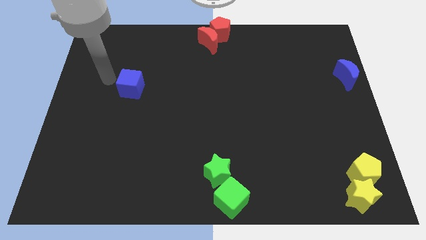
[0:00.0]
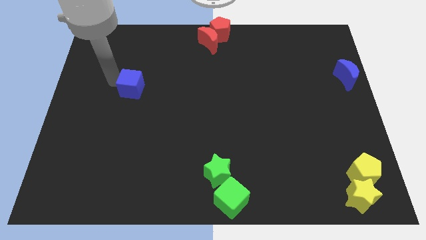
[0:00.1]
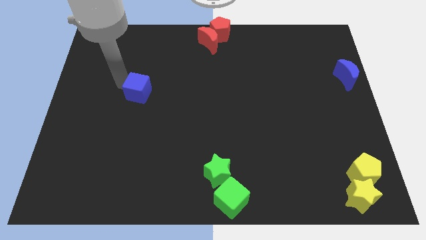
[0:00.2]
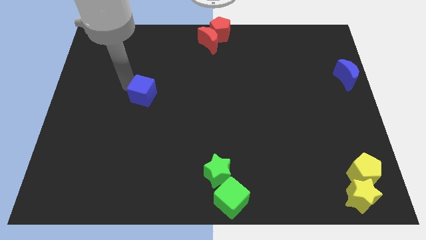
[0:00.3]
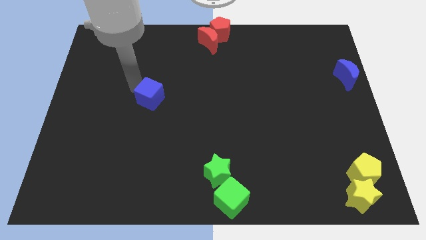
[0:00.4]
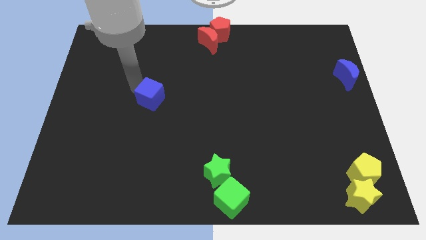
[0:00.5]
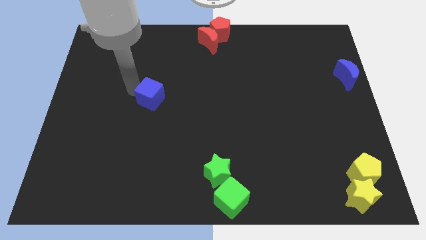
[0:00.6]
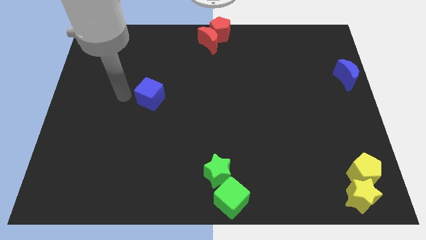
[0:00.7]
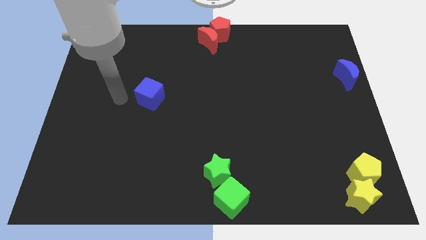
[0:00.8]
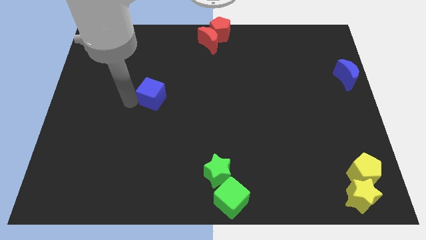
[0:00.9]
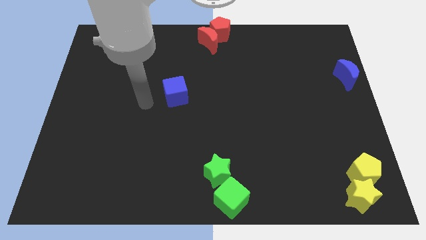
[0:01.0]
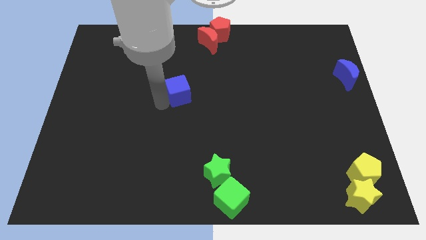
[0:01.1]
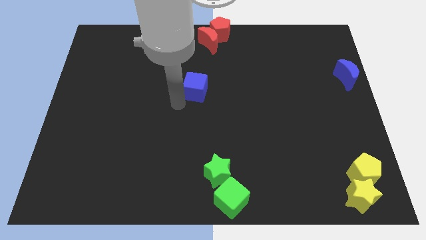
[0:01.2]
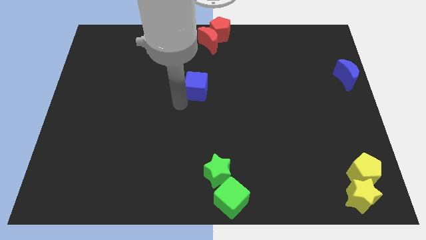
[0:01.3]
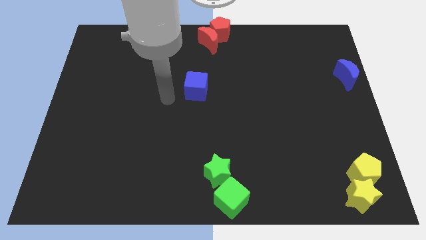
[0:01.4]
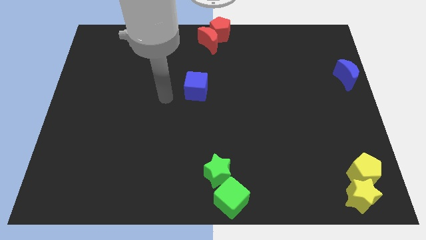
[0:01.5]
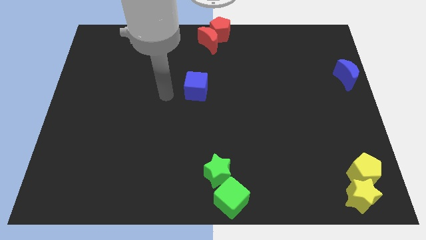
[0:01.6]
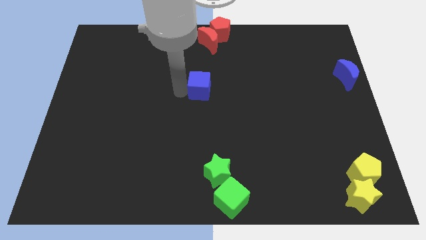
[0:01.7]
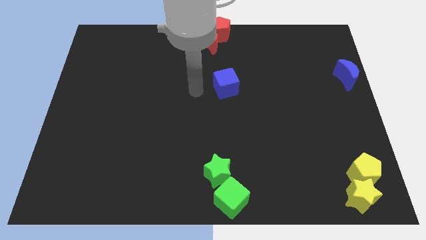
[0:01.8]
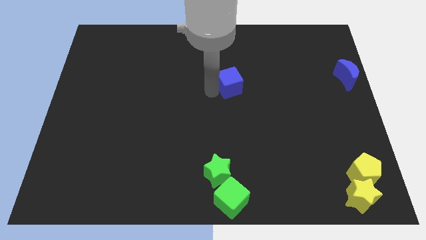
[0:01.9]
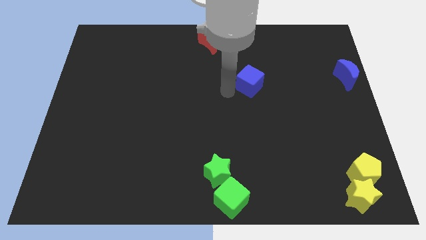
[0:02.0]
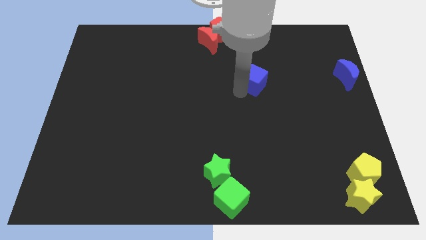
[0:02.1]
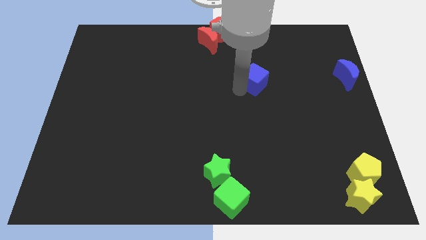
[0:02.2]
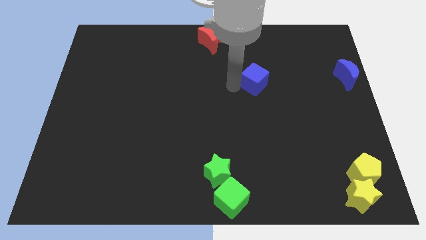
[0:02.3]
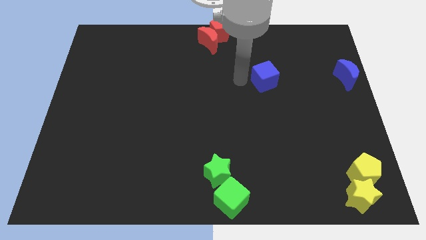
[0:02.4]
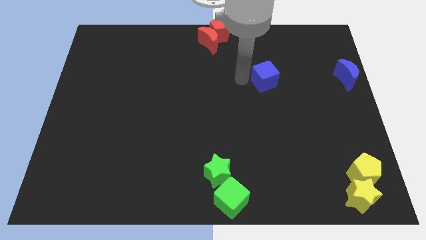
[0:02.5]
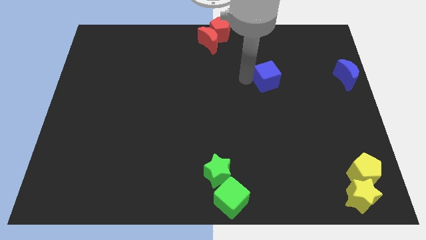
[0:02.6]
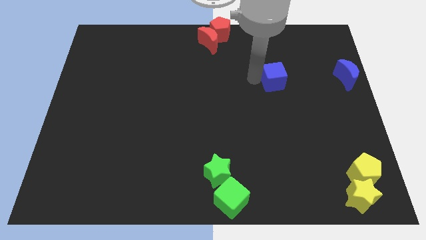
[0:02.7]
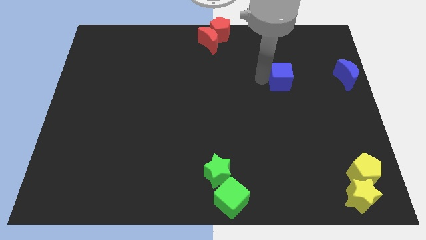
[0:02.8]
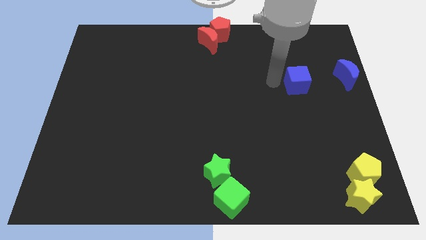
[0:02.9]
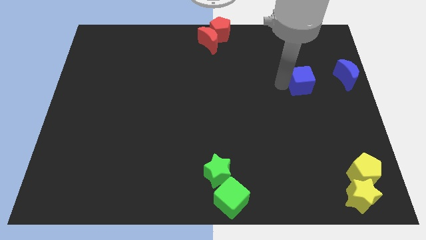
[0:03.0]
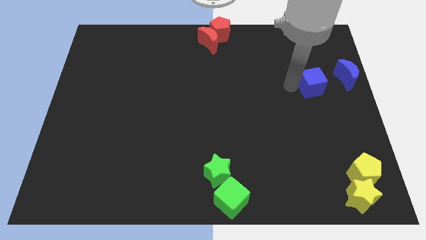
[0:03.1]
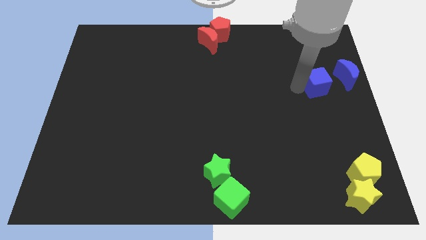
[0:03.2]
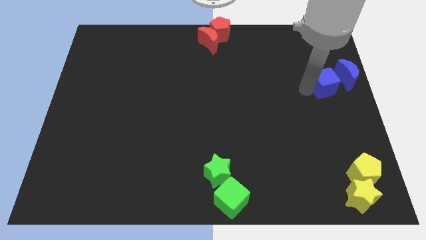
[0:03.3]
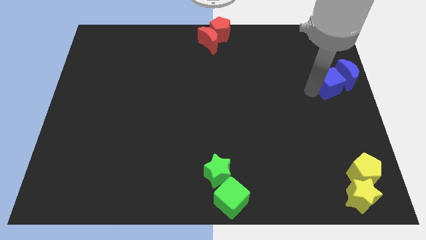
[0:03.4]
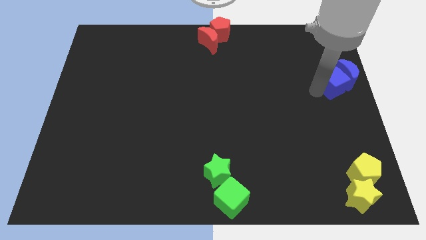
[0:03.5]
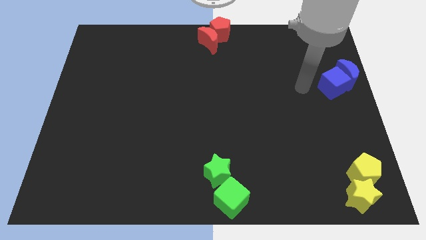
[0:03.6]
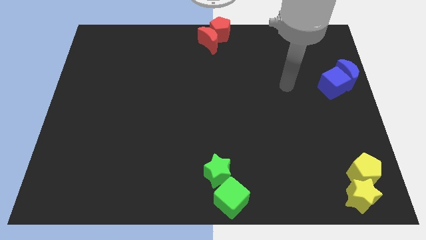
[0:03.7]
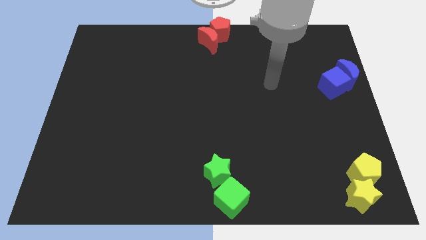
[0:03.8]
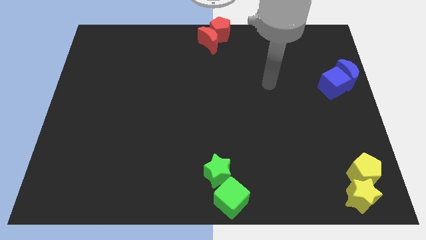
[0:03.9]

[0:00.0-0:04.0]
push the blue cube into the blue moon

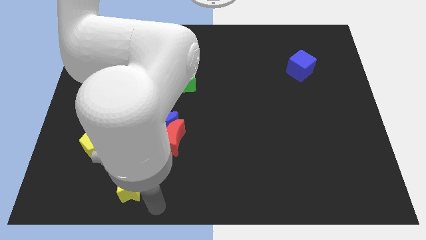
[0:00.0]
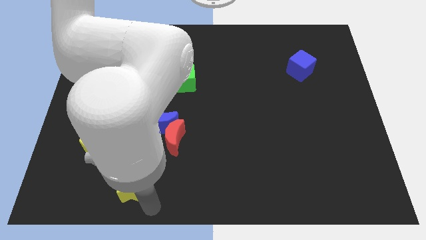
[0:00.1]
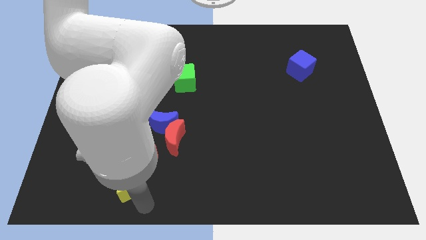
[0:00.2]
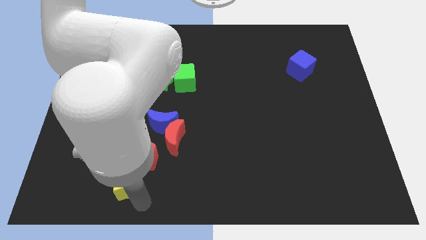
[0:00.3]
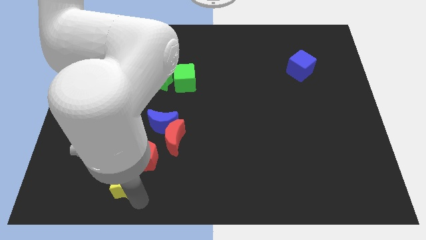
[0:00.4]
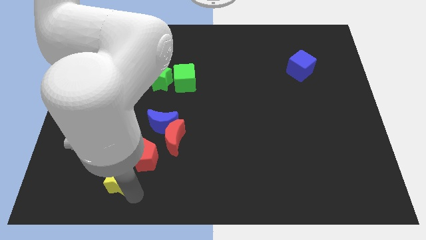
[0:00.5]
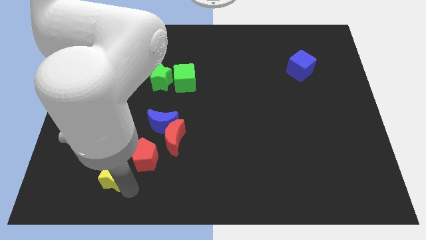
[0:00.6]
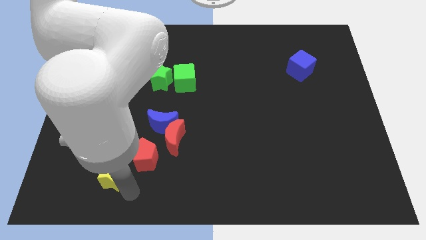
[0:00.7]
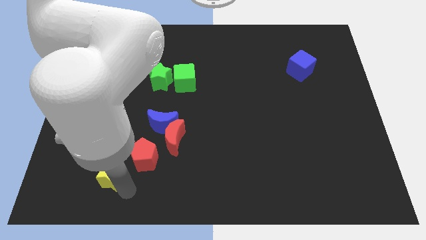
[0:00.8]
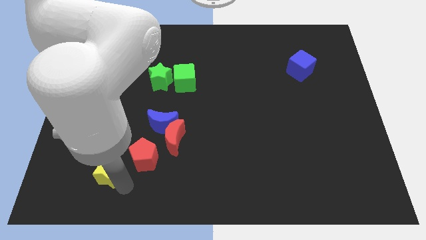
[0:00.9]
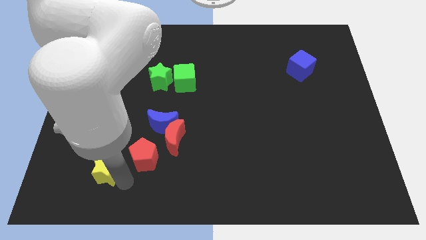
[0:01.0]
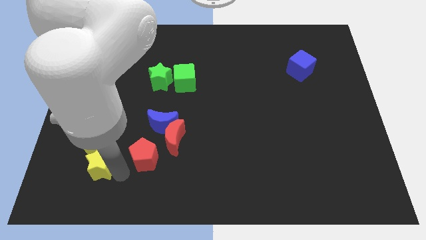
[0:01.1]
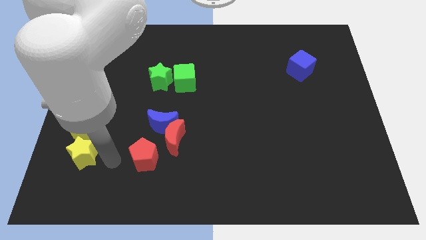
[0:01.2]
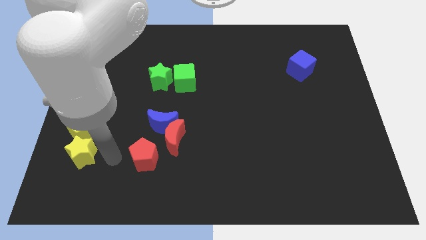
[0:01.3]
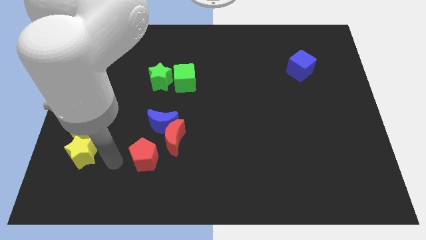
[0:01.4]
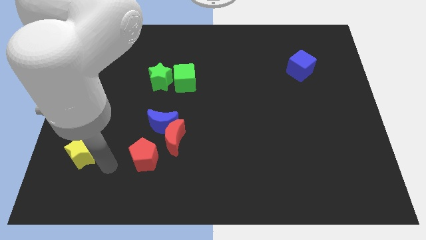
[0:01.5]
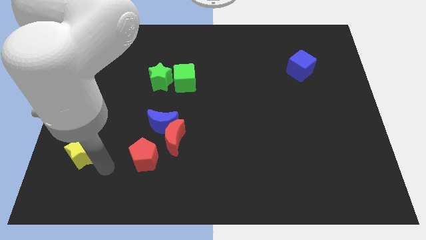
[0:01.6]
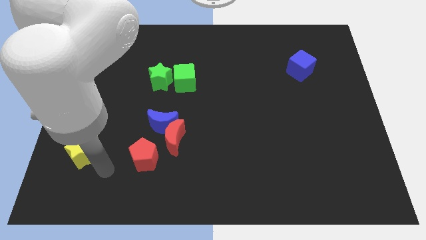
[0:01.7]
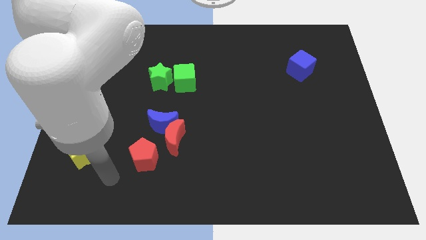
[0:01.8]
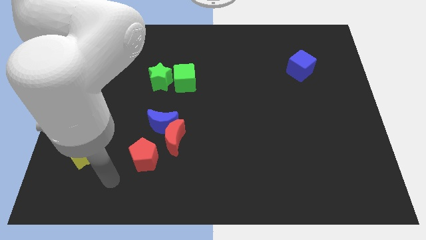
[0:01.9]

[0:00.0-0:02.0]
push the yellow star into the yellow pentagon

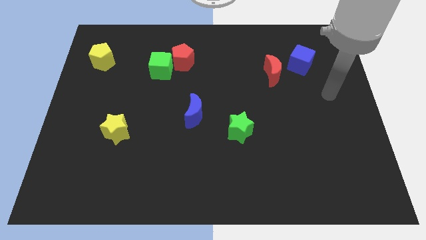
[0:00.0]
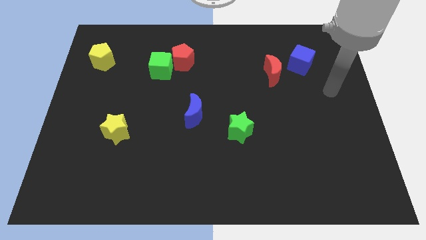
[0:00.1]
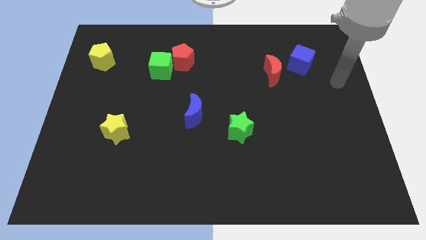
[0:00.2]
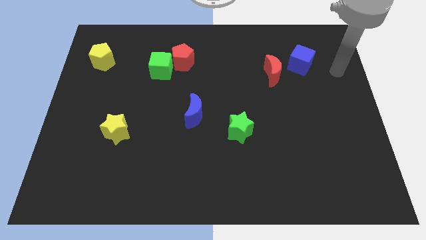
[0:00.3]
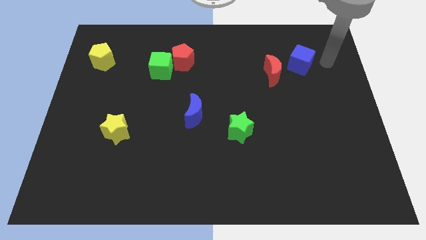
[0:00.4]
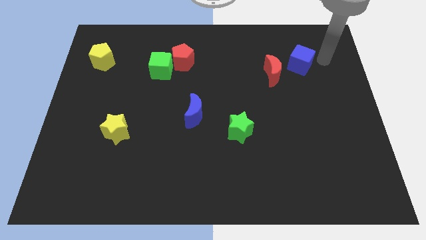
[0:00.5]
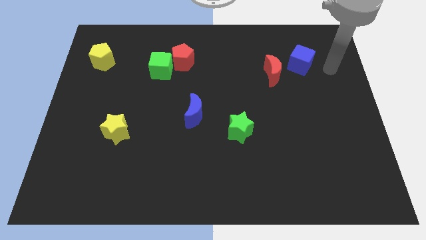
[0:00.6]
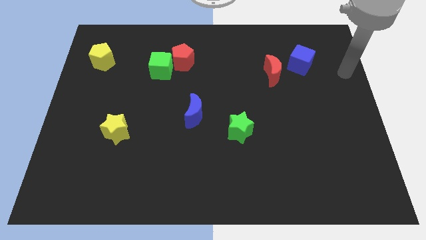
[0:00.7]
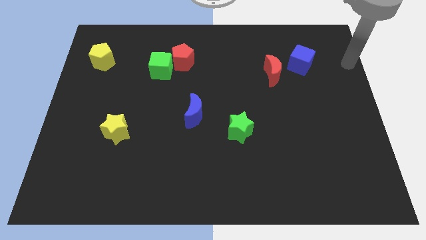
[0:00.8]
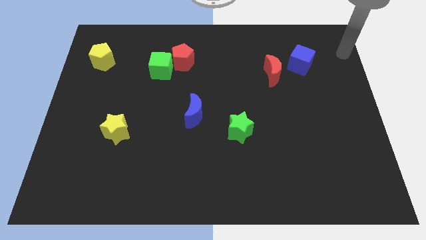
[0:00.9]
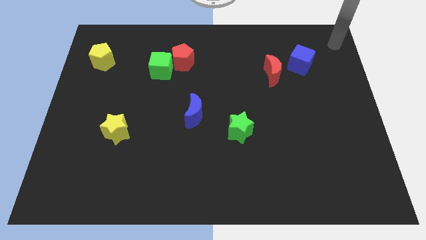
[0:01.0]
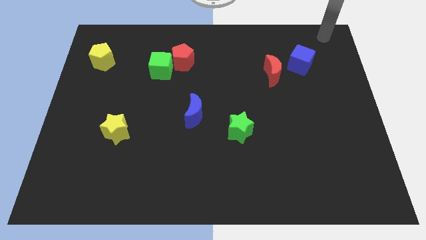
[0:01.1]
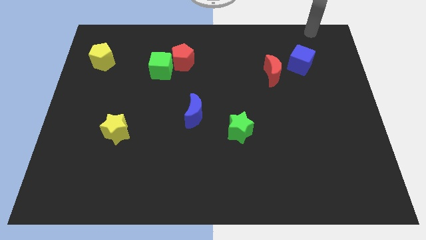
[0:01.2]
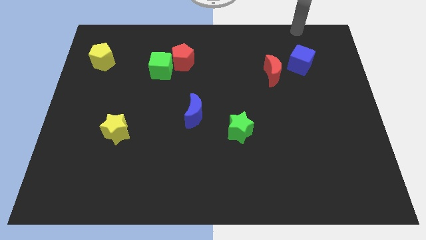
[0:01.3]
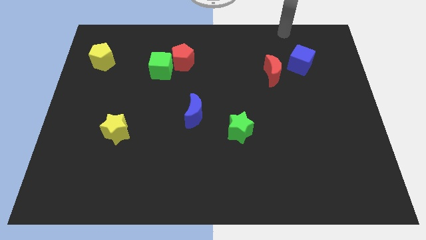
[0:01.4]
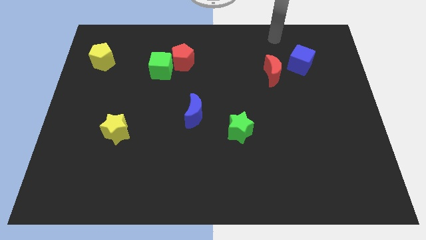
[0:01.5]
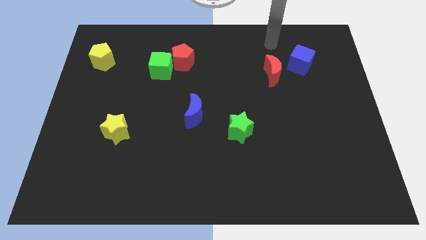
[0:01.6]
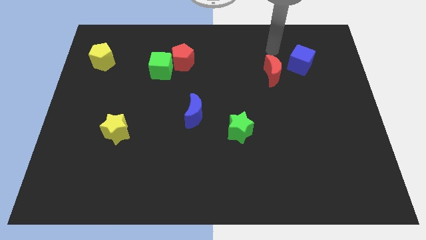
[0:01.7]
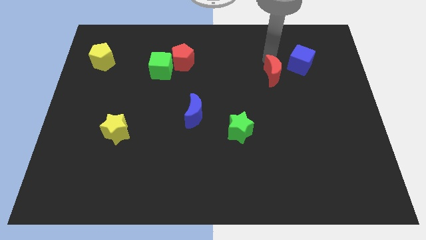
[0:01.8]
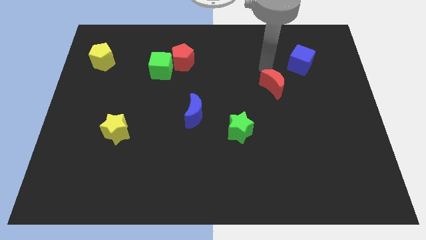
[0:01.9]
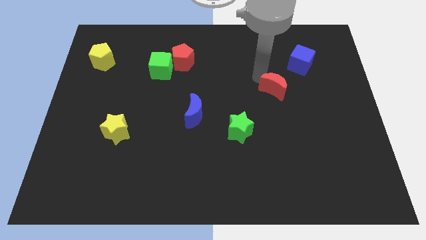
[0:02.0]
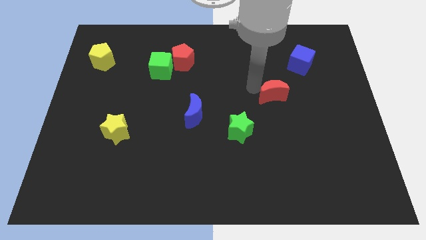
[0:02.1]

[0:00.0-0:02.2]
push red crescent slightly below

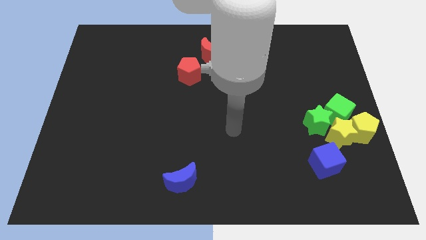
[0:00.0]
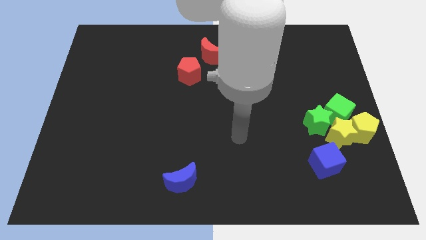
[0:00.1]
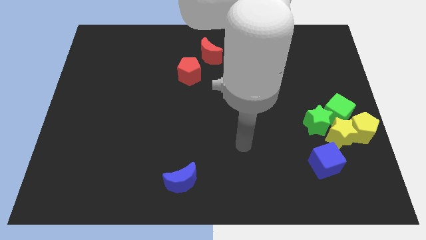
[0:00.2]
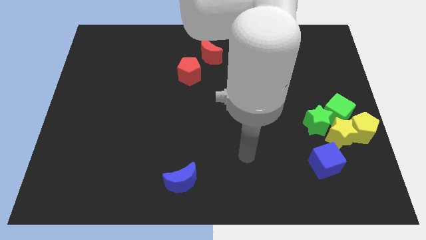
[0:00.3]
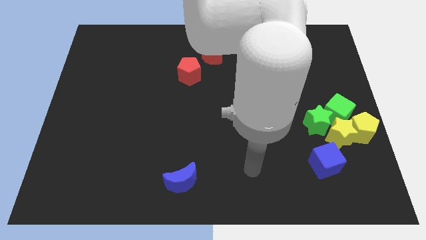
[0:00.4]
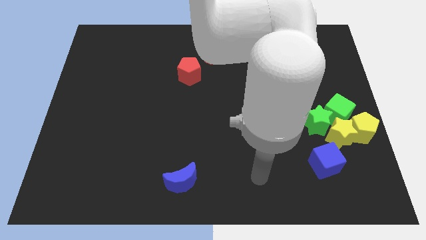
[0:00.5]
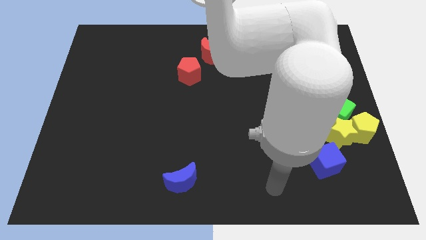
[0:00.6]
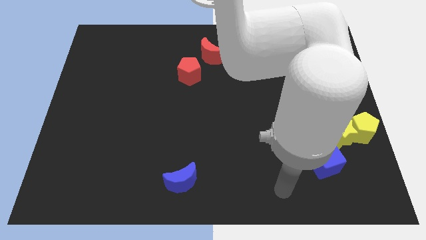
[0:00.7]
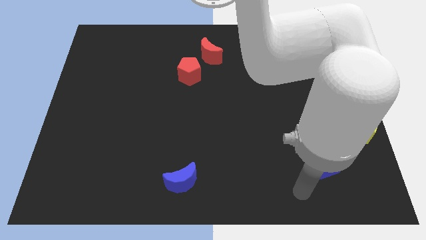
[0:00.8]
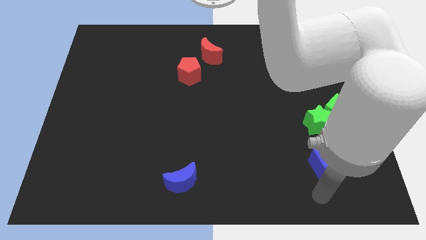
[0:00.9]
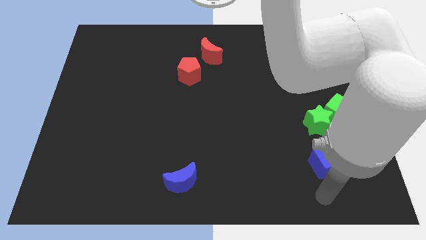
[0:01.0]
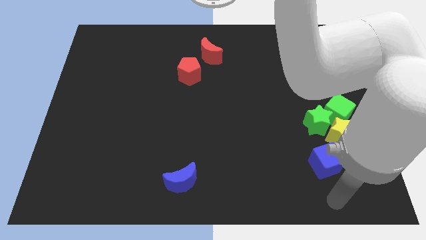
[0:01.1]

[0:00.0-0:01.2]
place your arm to the bottom of blue cube
